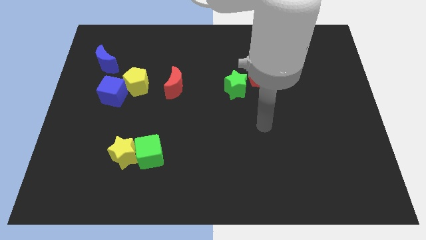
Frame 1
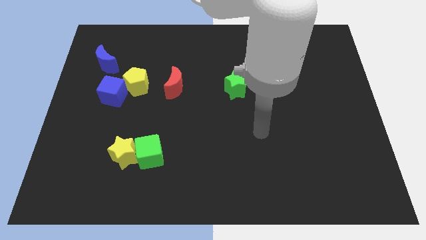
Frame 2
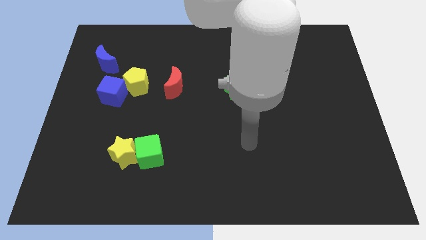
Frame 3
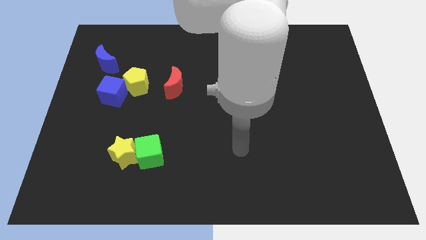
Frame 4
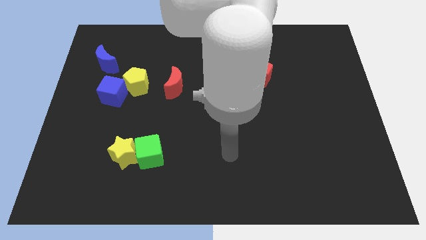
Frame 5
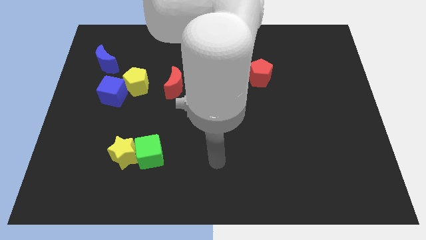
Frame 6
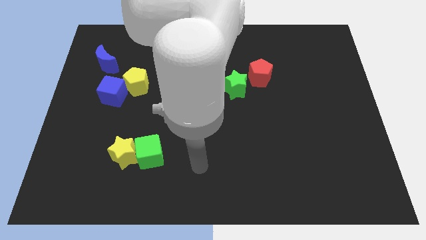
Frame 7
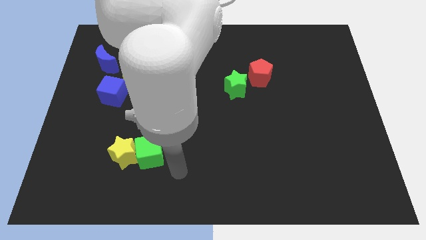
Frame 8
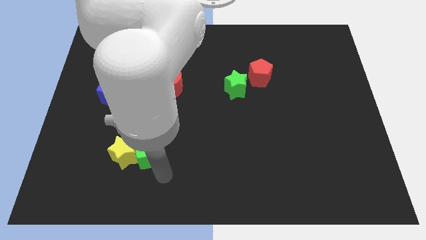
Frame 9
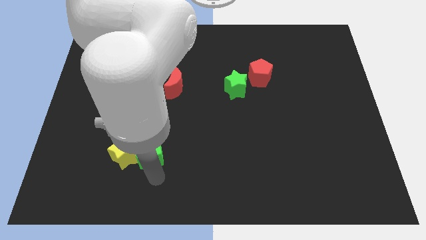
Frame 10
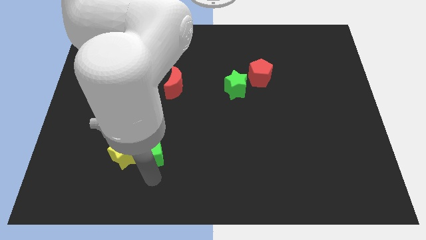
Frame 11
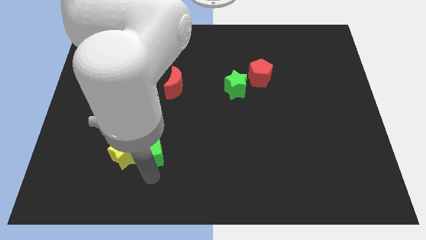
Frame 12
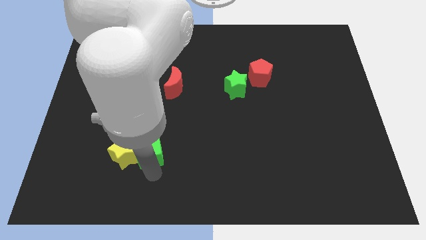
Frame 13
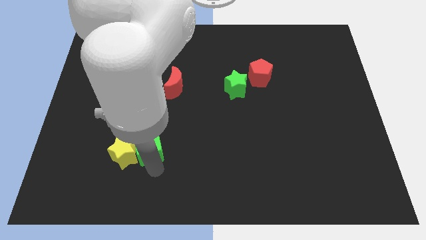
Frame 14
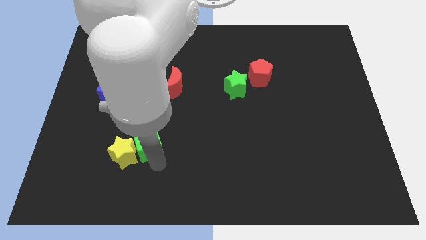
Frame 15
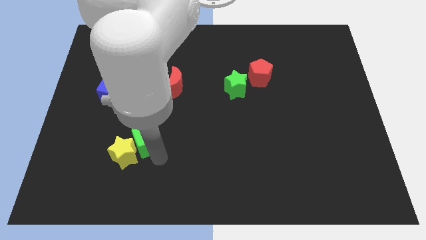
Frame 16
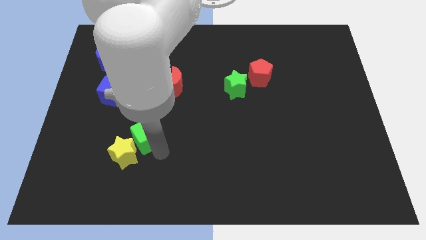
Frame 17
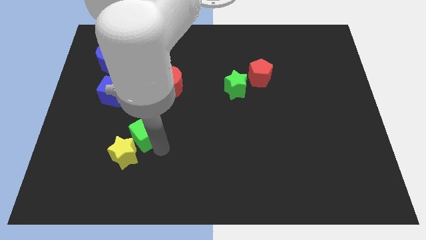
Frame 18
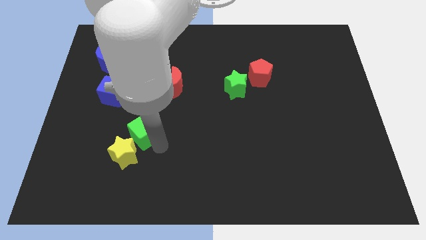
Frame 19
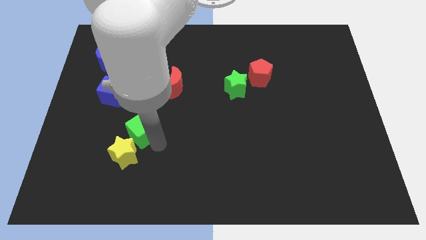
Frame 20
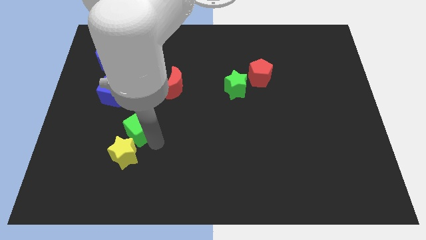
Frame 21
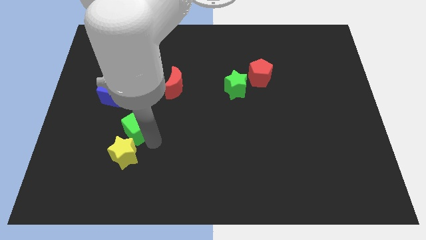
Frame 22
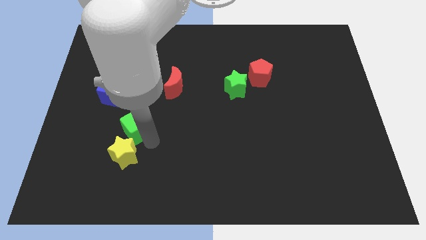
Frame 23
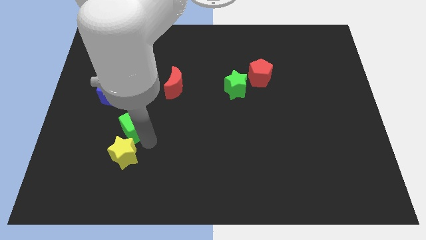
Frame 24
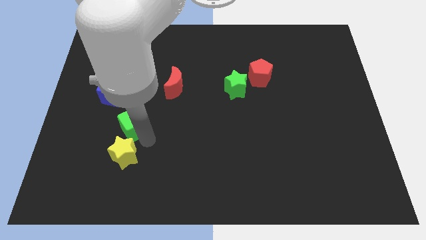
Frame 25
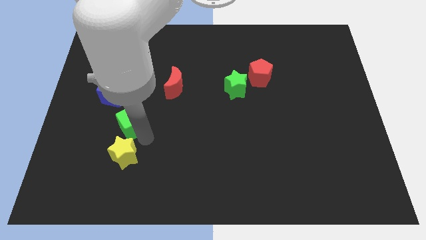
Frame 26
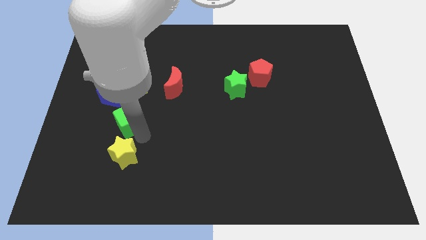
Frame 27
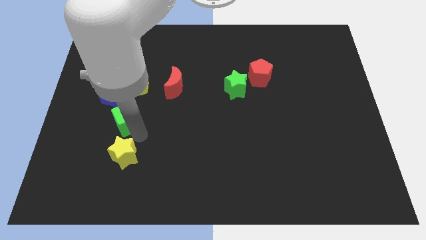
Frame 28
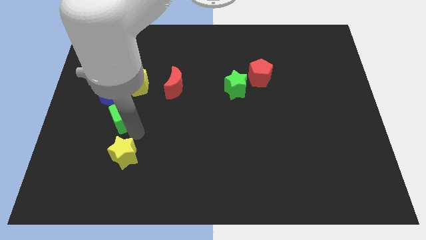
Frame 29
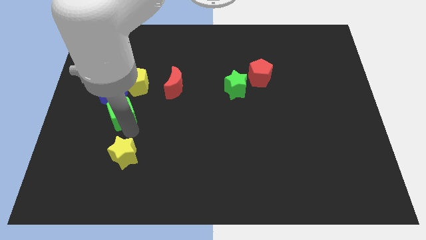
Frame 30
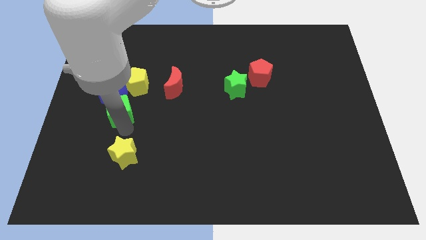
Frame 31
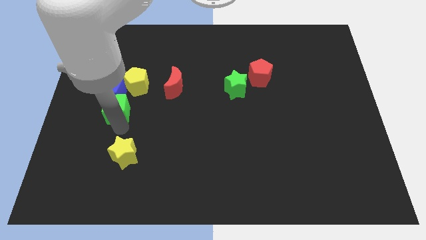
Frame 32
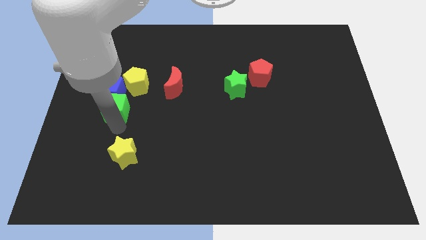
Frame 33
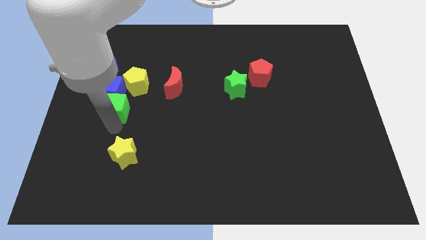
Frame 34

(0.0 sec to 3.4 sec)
move the green cube next to the blue cube

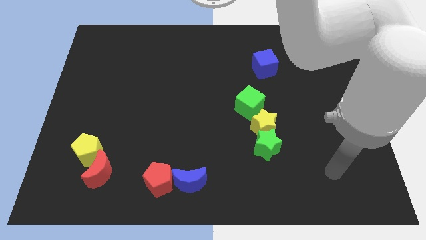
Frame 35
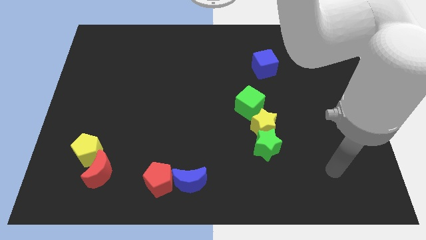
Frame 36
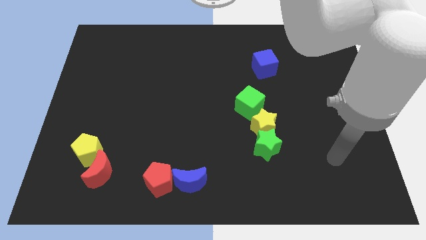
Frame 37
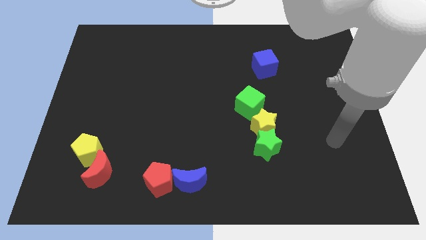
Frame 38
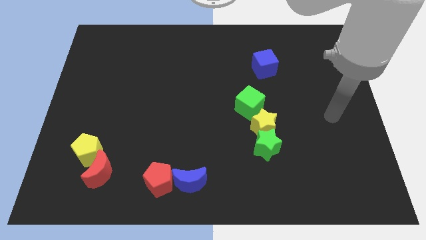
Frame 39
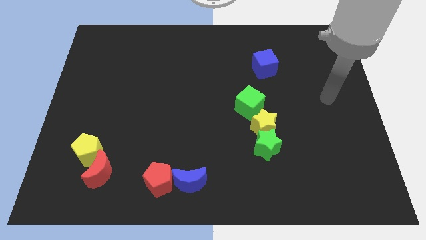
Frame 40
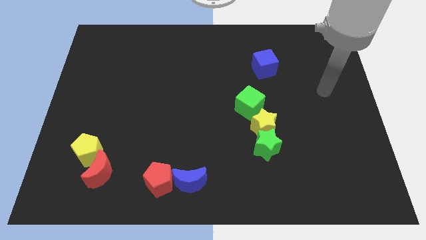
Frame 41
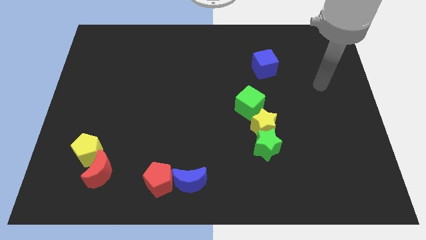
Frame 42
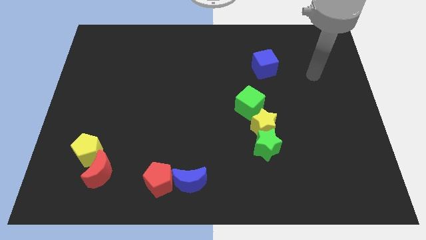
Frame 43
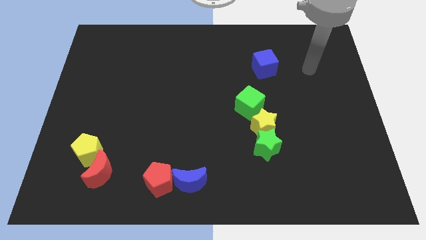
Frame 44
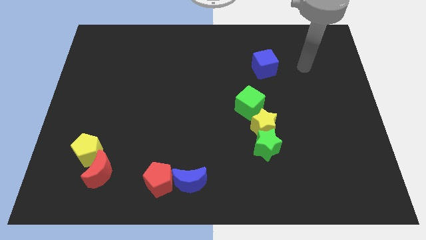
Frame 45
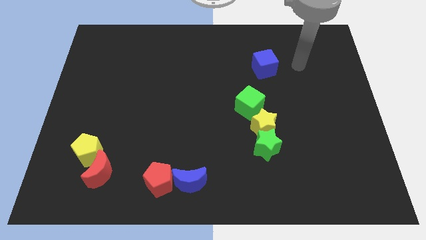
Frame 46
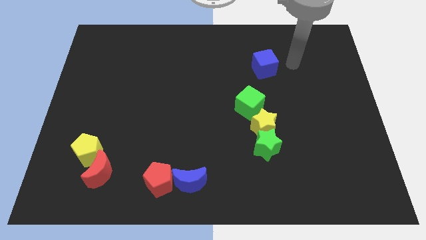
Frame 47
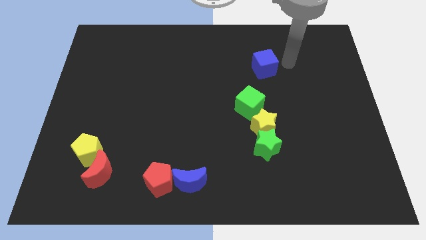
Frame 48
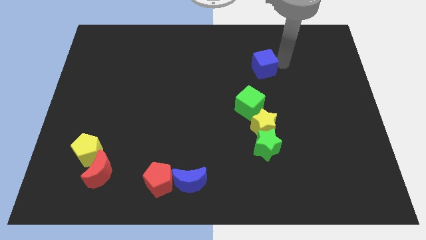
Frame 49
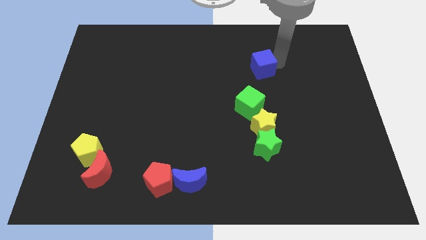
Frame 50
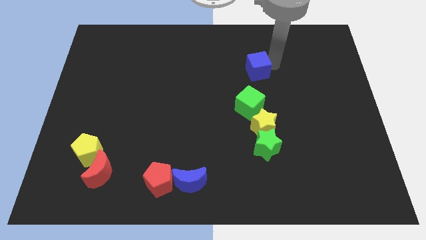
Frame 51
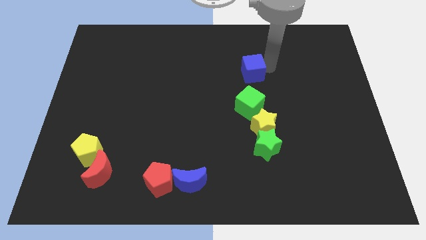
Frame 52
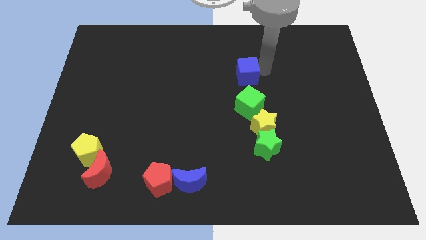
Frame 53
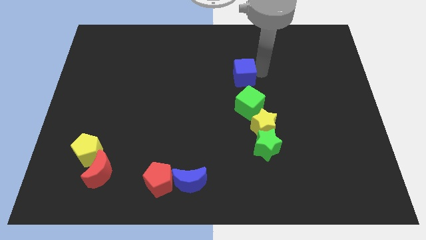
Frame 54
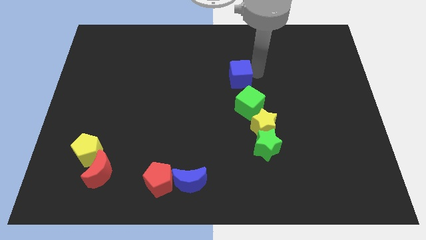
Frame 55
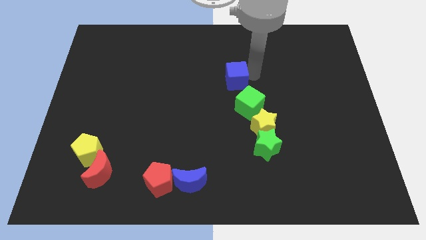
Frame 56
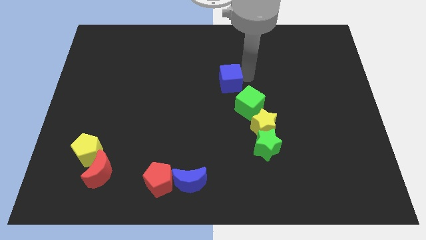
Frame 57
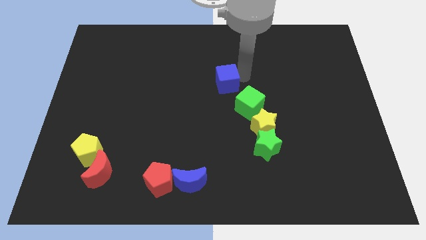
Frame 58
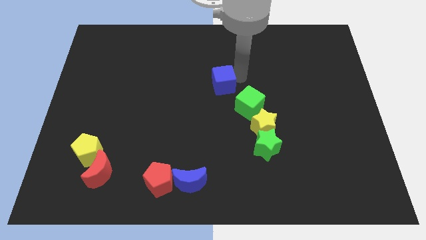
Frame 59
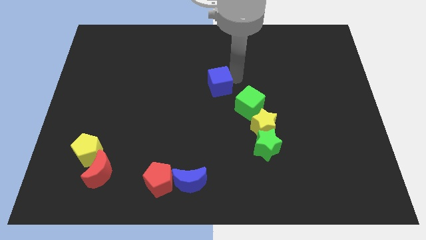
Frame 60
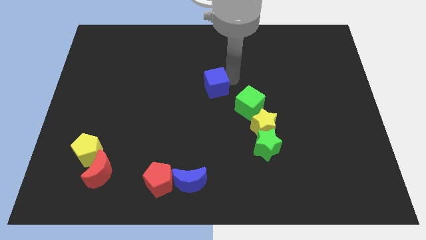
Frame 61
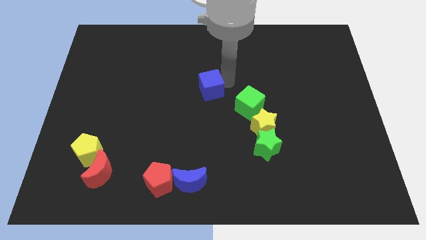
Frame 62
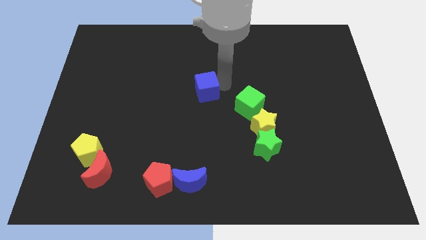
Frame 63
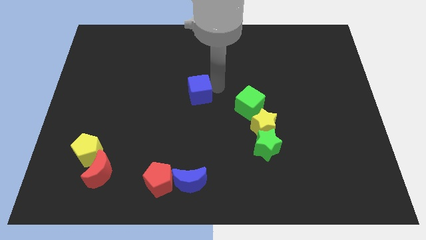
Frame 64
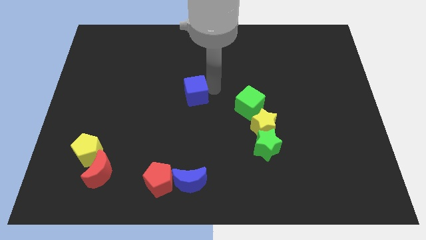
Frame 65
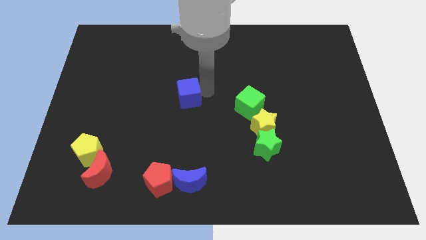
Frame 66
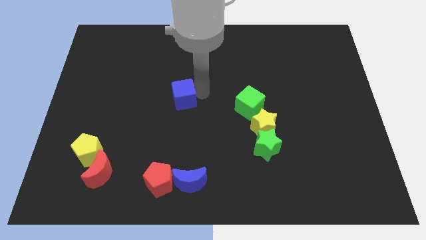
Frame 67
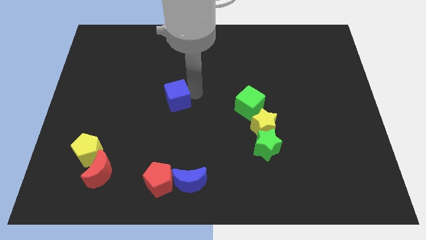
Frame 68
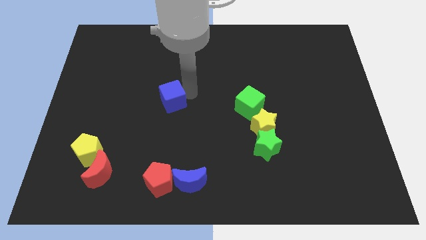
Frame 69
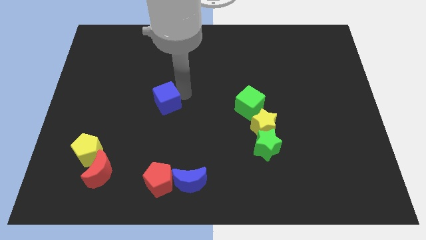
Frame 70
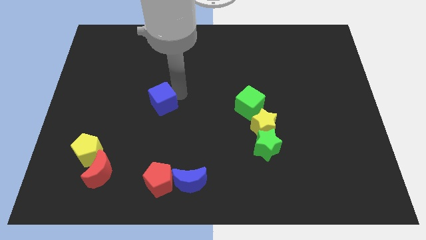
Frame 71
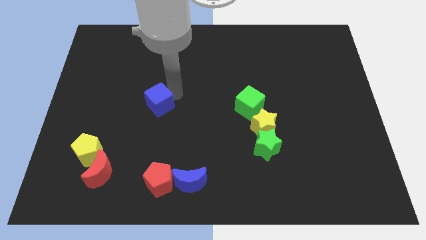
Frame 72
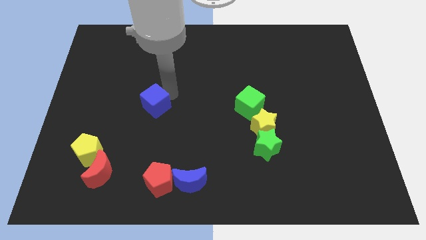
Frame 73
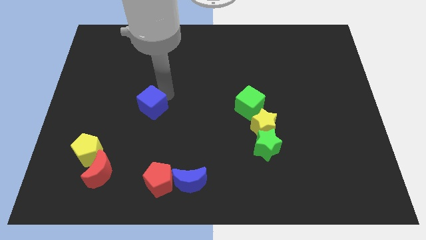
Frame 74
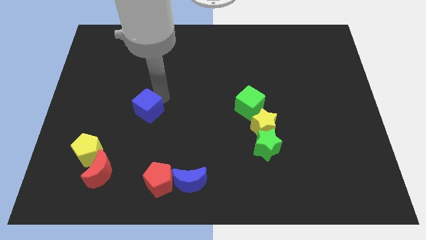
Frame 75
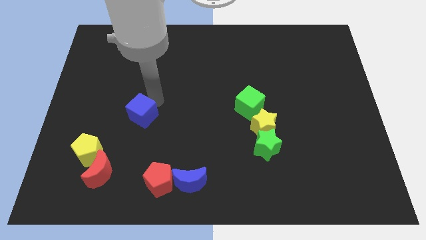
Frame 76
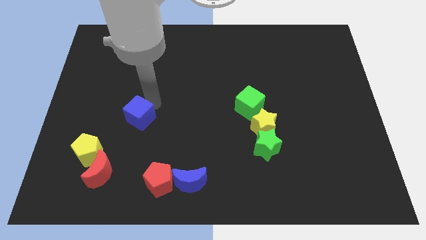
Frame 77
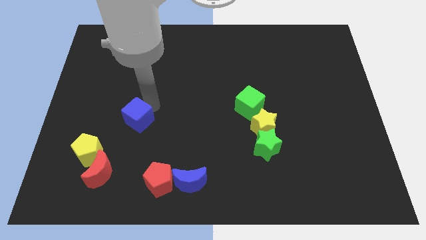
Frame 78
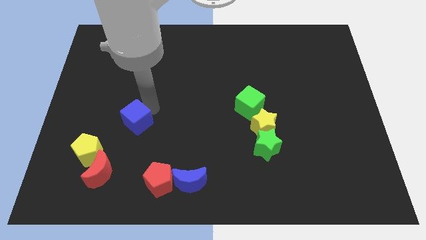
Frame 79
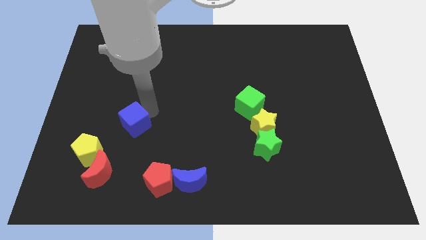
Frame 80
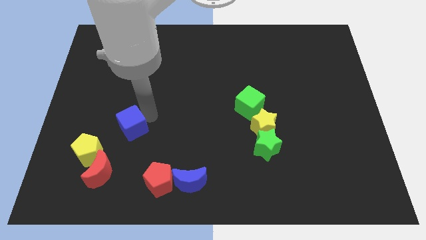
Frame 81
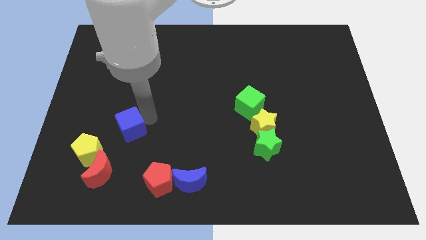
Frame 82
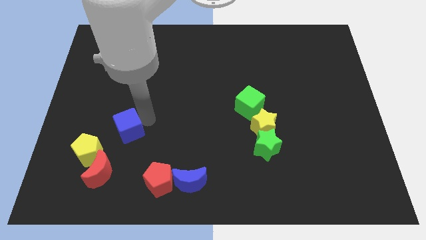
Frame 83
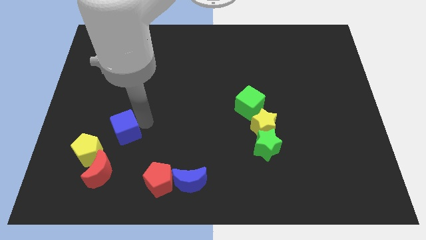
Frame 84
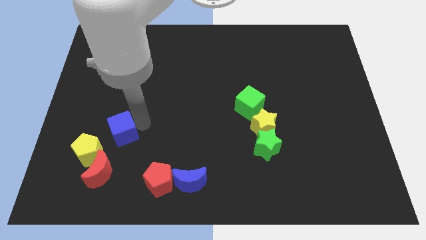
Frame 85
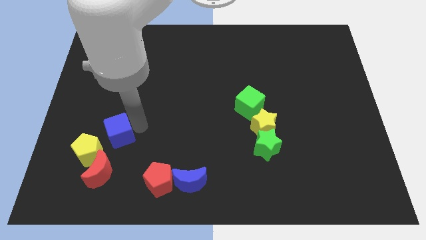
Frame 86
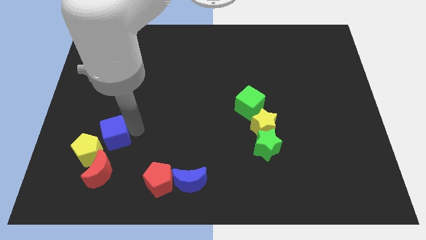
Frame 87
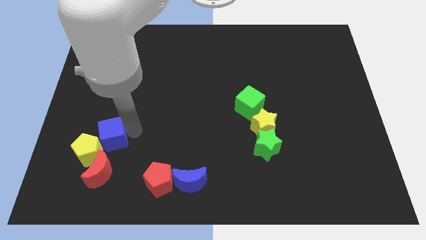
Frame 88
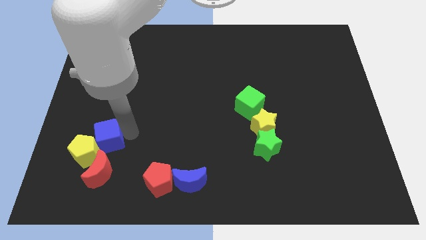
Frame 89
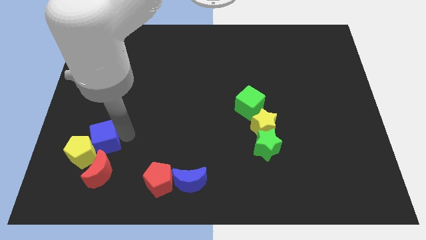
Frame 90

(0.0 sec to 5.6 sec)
move the blue cube next to the yellow pentagon
